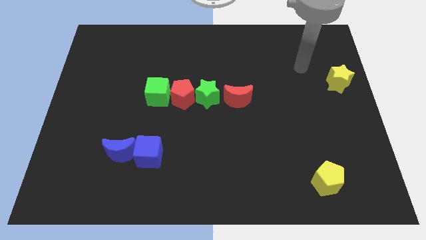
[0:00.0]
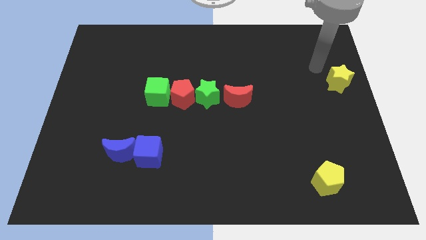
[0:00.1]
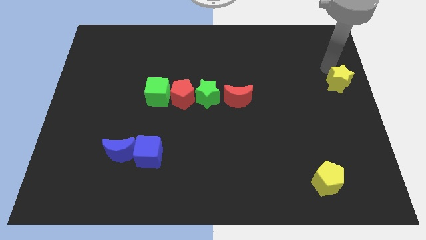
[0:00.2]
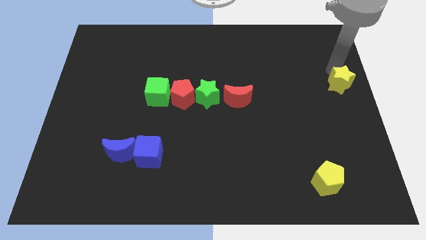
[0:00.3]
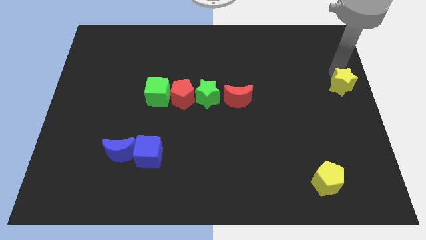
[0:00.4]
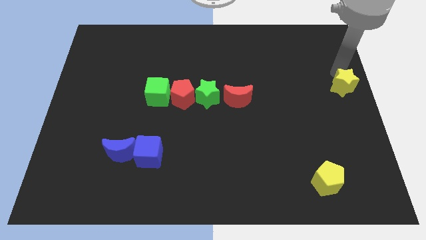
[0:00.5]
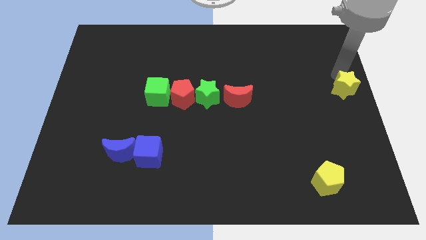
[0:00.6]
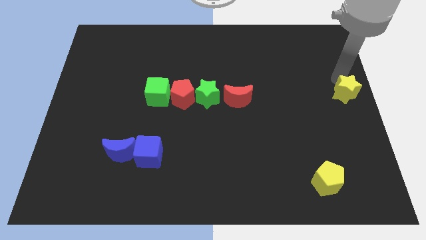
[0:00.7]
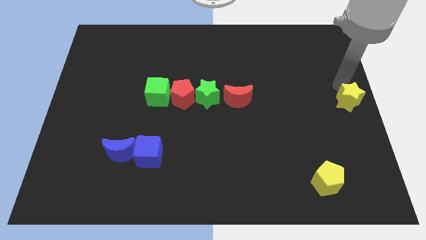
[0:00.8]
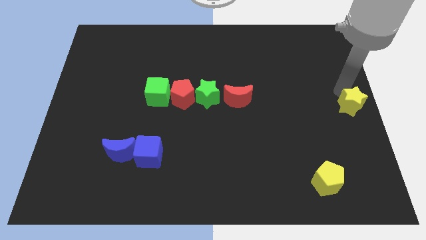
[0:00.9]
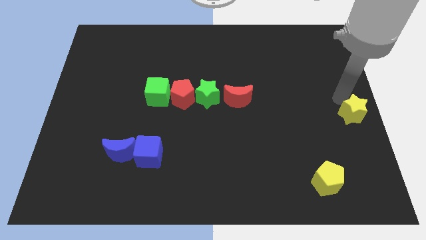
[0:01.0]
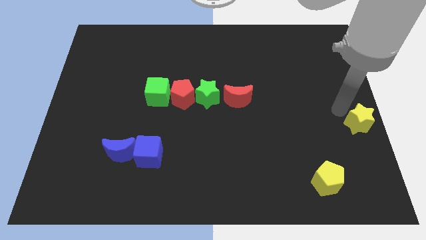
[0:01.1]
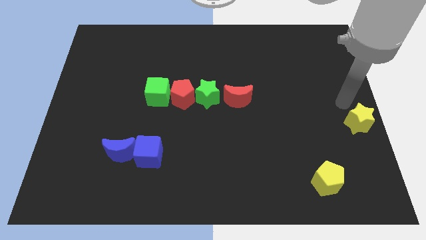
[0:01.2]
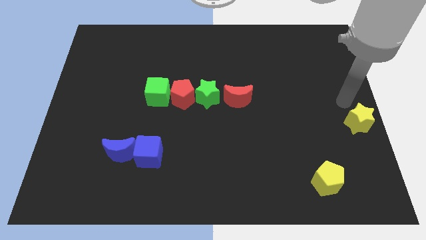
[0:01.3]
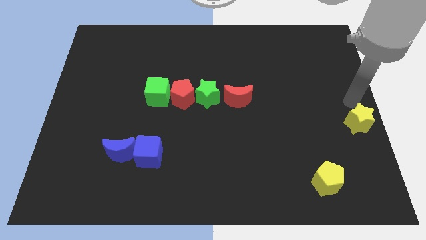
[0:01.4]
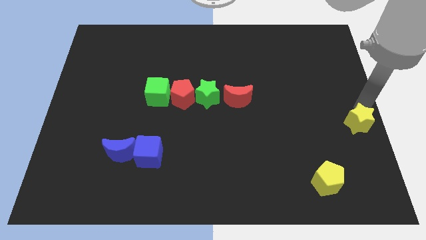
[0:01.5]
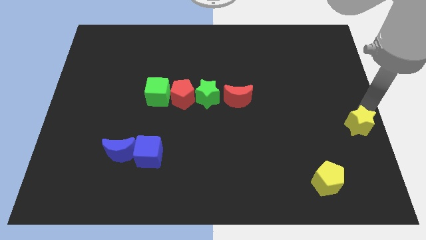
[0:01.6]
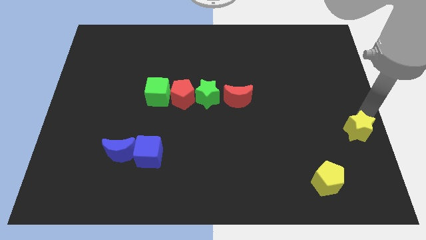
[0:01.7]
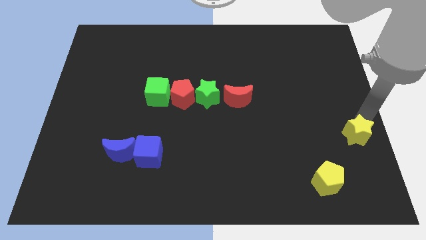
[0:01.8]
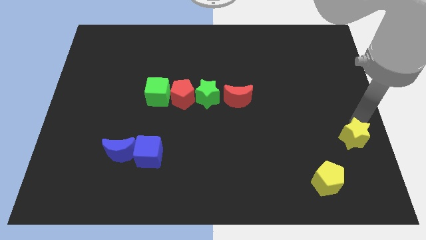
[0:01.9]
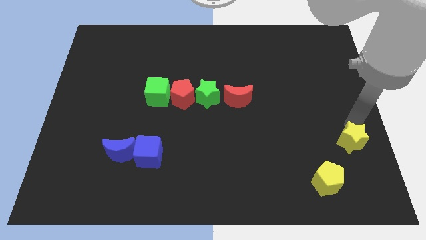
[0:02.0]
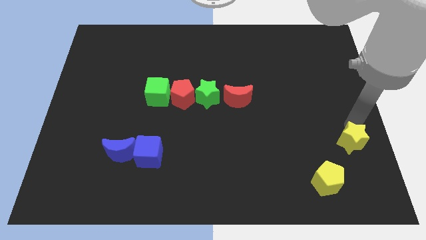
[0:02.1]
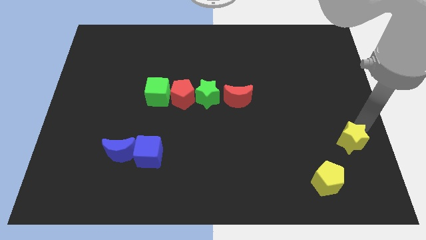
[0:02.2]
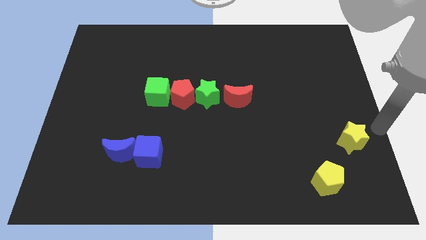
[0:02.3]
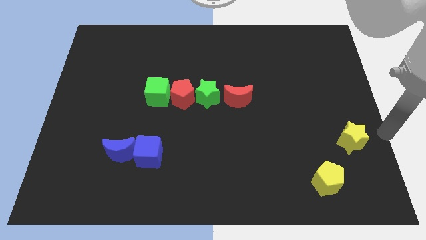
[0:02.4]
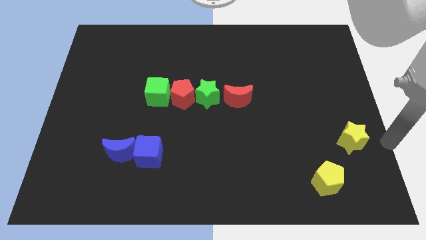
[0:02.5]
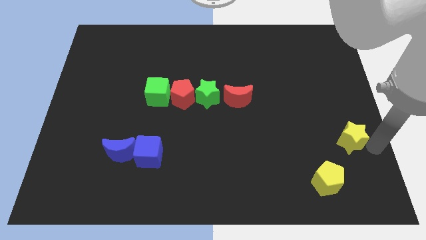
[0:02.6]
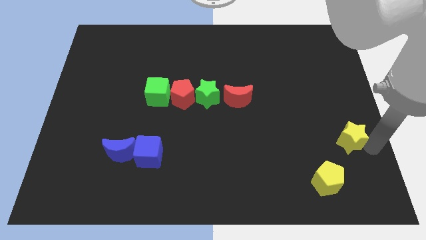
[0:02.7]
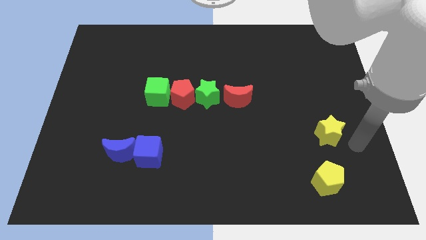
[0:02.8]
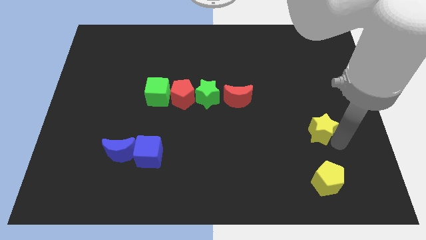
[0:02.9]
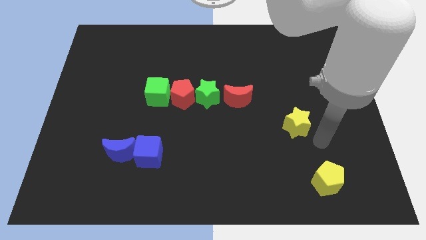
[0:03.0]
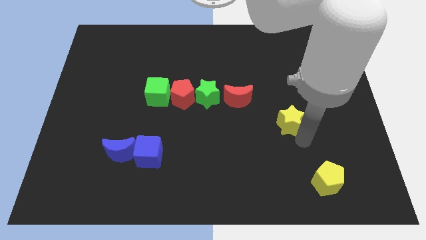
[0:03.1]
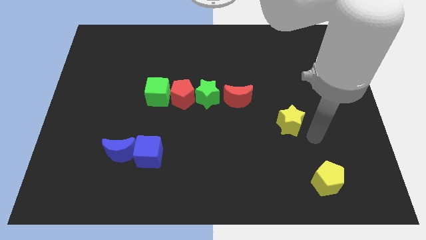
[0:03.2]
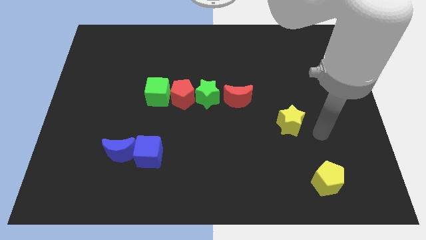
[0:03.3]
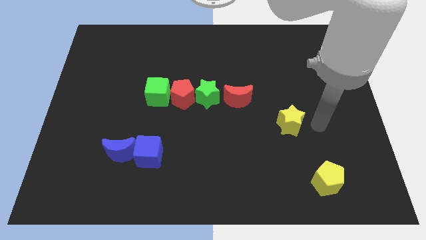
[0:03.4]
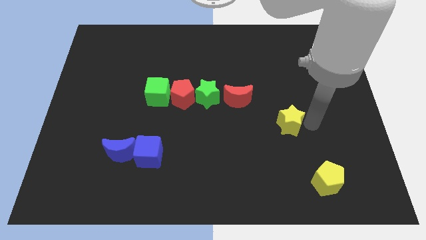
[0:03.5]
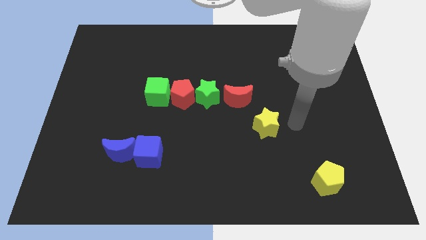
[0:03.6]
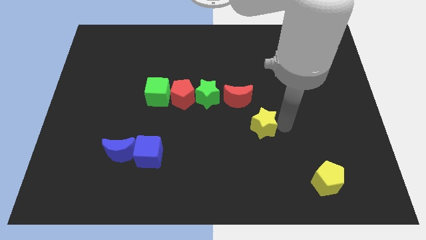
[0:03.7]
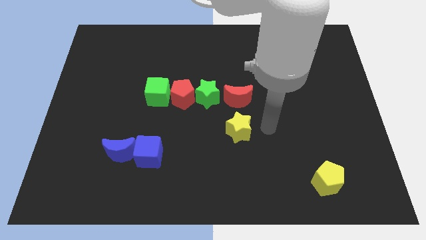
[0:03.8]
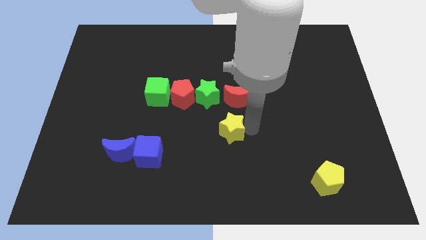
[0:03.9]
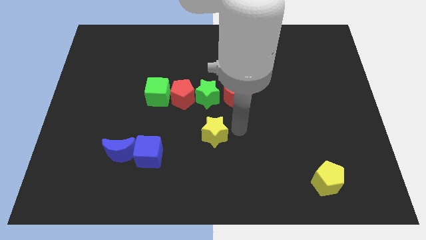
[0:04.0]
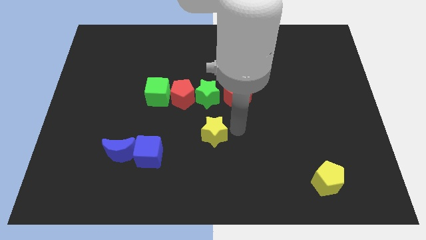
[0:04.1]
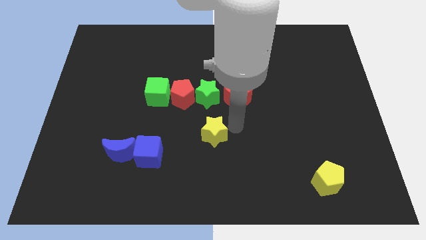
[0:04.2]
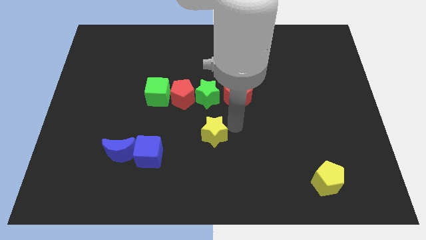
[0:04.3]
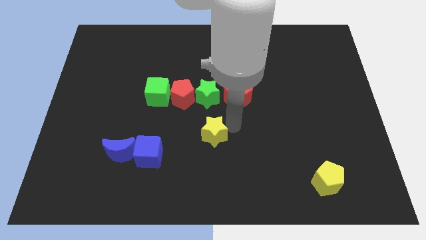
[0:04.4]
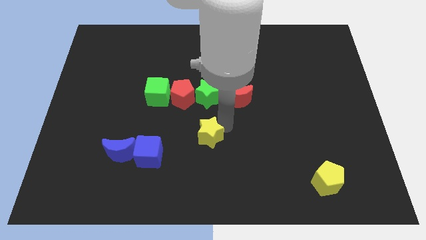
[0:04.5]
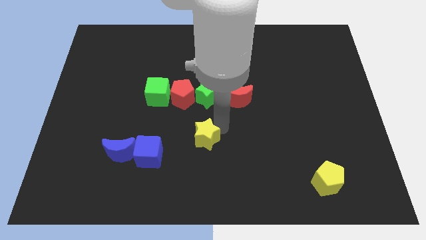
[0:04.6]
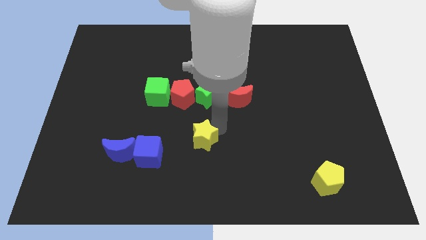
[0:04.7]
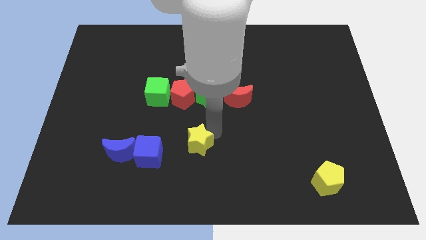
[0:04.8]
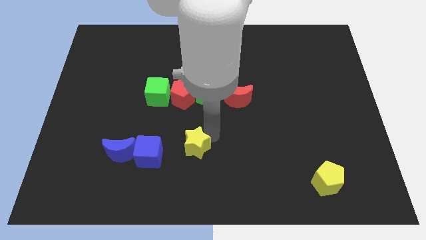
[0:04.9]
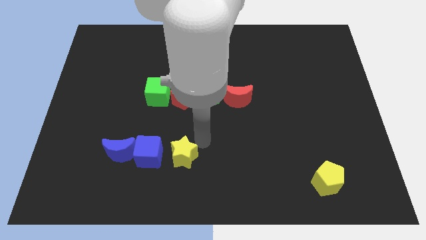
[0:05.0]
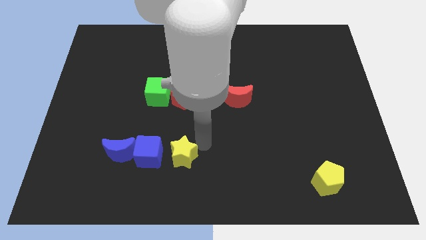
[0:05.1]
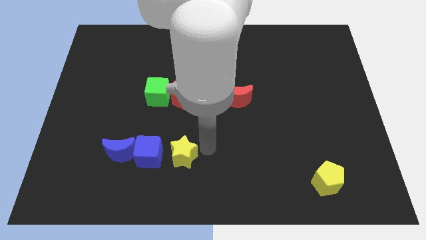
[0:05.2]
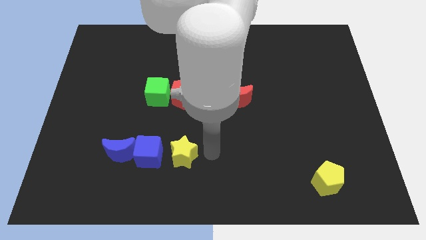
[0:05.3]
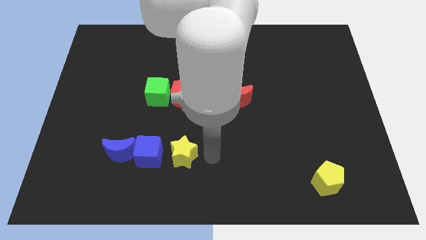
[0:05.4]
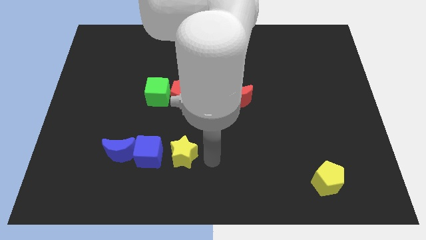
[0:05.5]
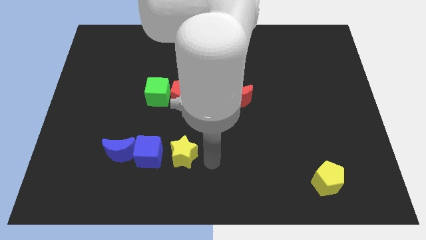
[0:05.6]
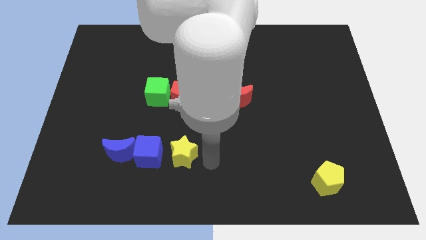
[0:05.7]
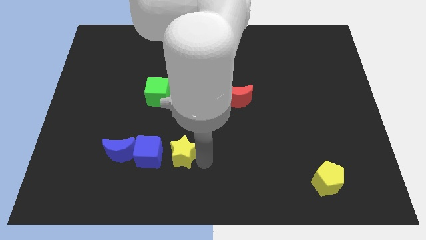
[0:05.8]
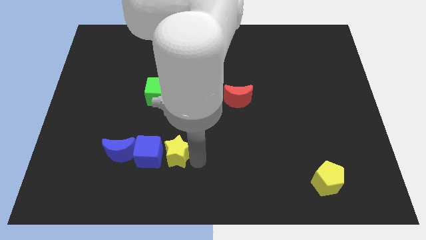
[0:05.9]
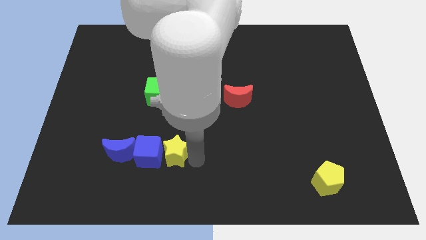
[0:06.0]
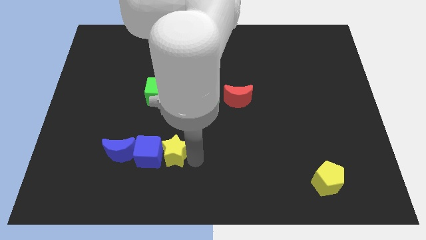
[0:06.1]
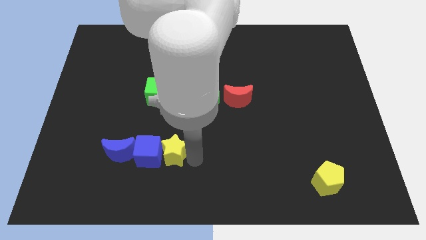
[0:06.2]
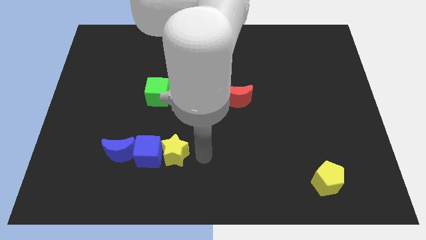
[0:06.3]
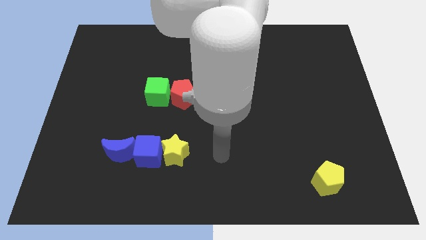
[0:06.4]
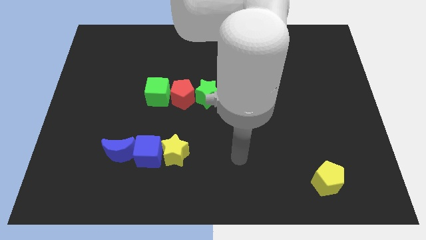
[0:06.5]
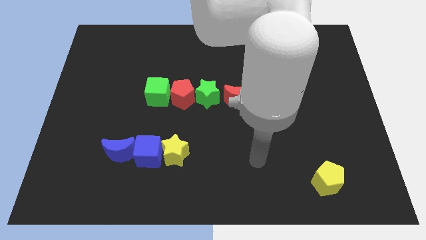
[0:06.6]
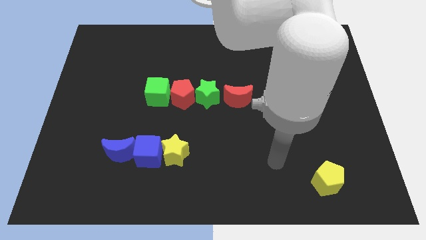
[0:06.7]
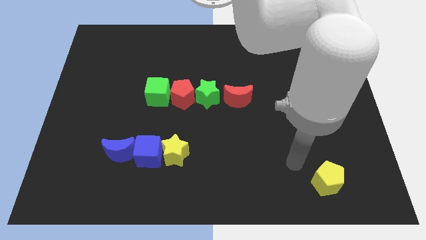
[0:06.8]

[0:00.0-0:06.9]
push the yellow star close to the blue cube

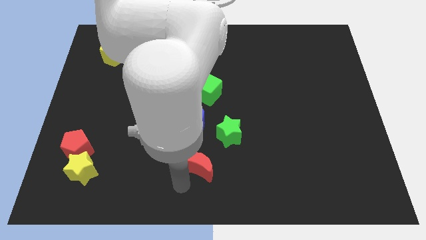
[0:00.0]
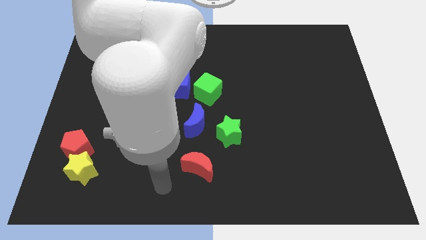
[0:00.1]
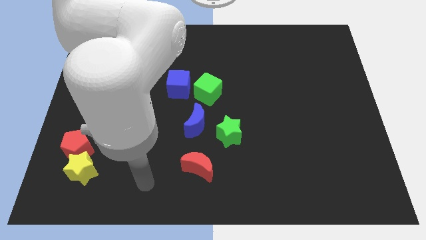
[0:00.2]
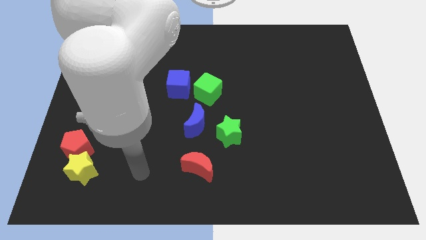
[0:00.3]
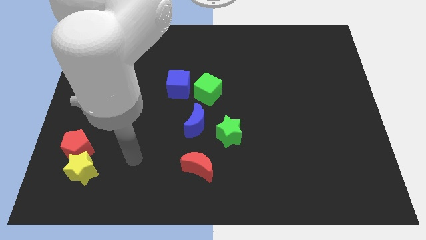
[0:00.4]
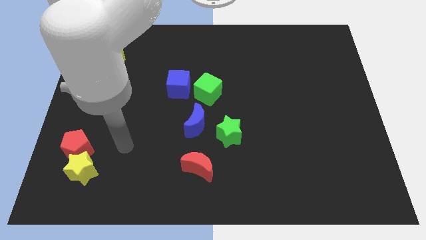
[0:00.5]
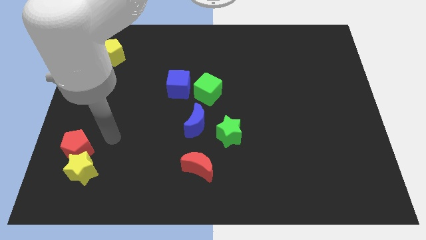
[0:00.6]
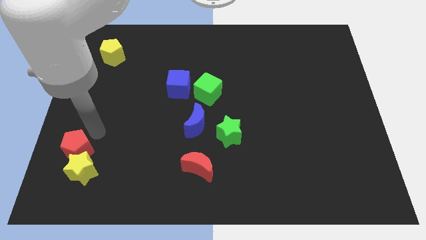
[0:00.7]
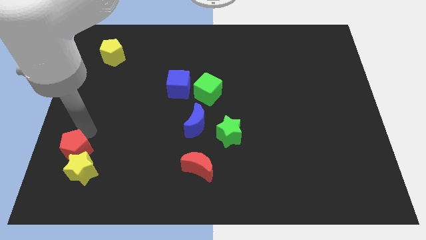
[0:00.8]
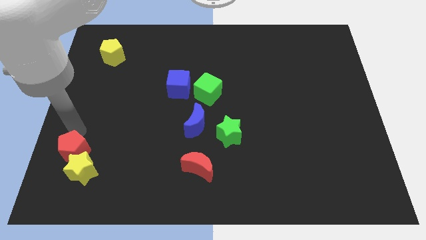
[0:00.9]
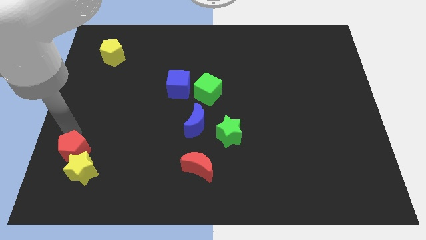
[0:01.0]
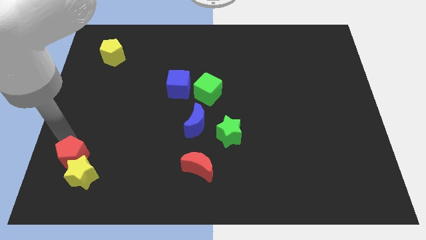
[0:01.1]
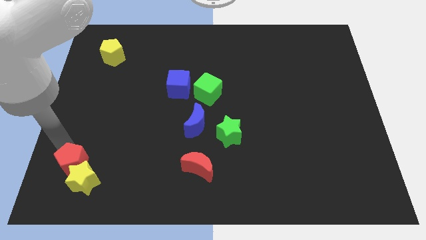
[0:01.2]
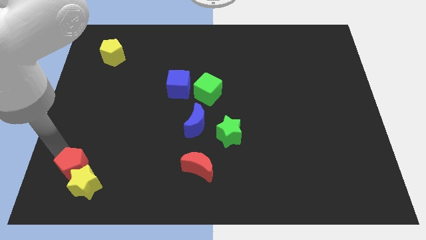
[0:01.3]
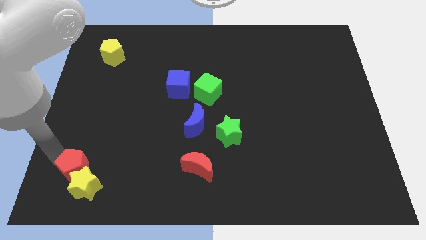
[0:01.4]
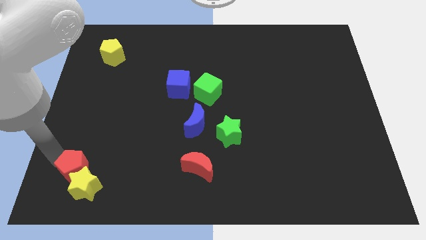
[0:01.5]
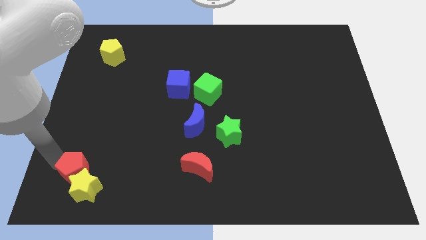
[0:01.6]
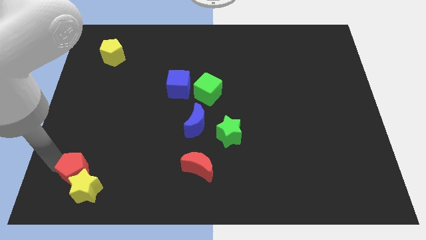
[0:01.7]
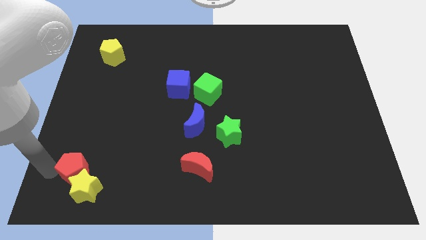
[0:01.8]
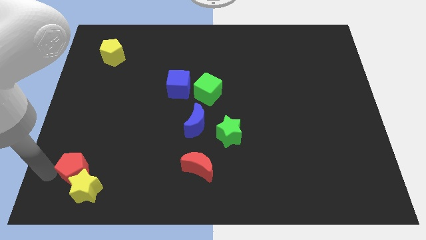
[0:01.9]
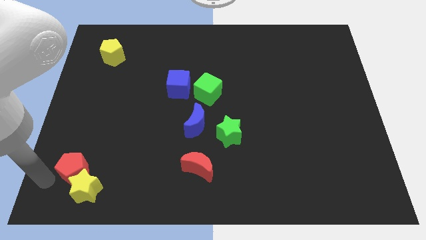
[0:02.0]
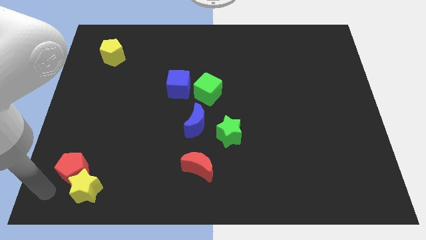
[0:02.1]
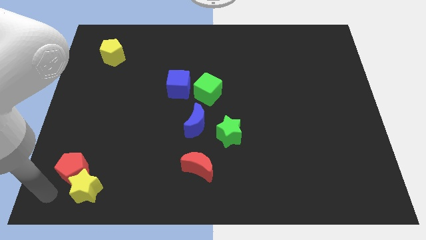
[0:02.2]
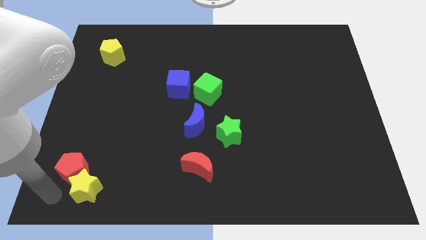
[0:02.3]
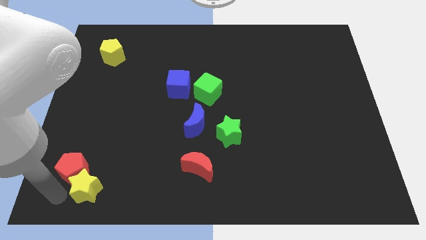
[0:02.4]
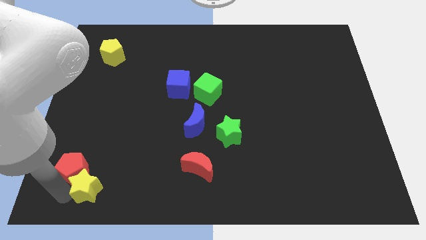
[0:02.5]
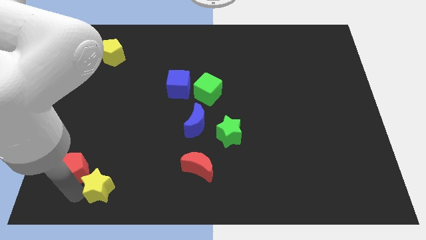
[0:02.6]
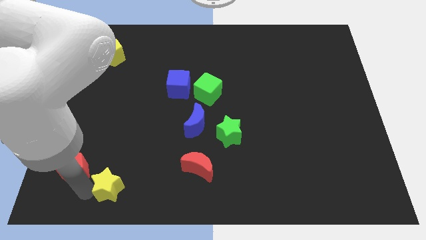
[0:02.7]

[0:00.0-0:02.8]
move the red pentagon and yellow star to the bottom left
